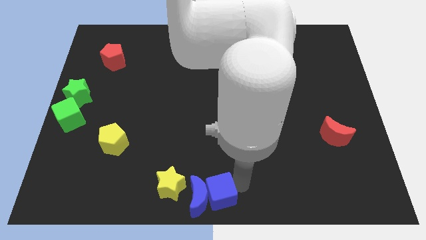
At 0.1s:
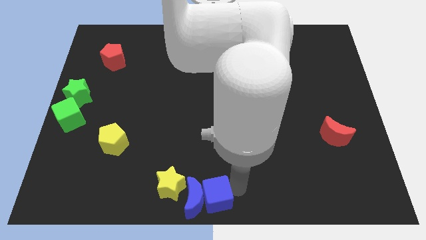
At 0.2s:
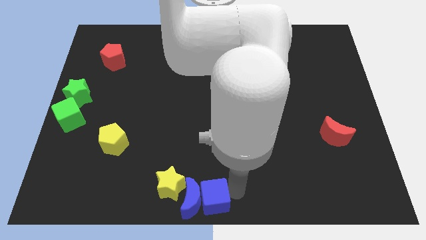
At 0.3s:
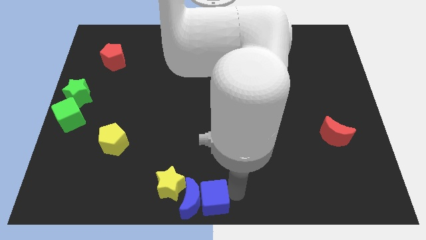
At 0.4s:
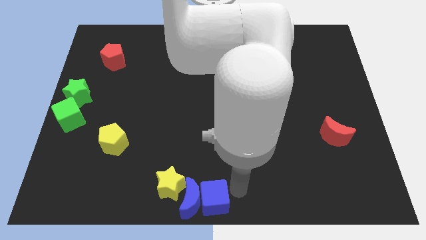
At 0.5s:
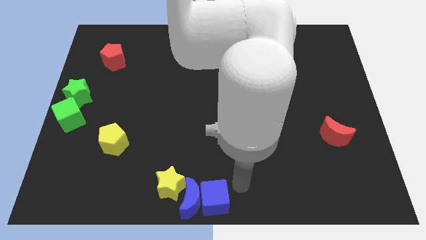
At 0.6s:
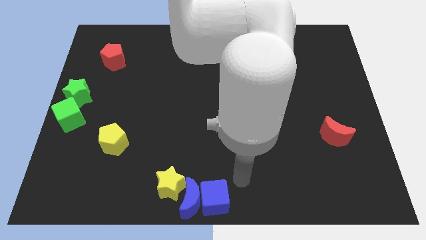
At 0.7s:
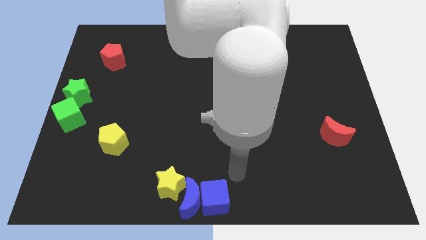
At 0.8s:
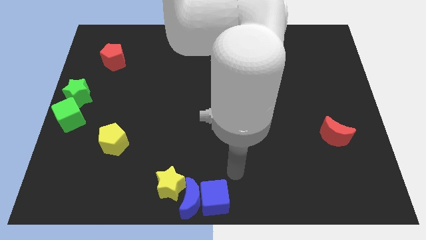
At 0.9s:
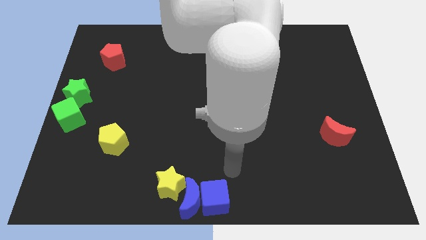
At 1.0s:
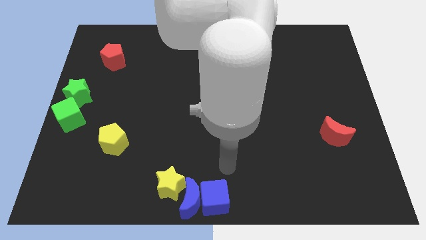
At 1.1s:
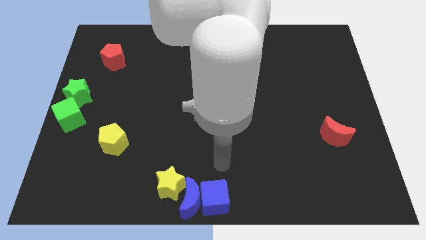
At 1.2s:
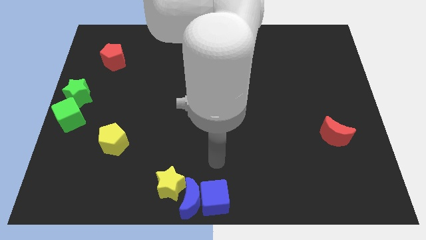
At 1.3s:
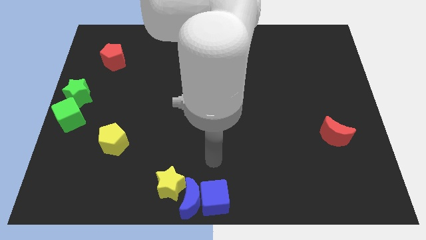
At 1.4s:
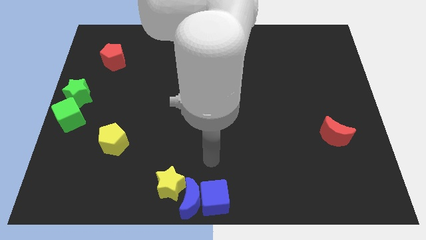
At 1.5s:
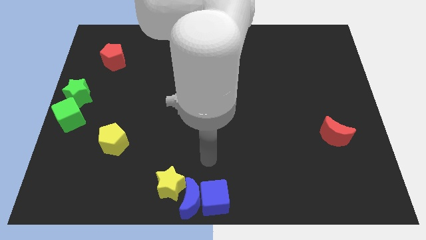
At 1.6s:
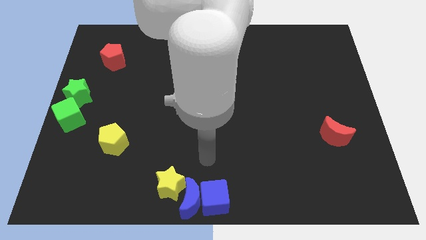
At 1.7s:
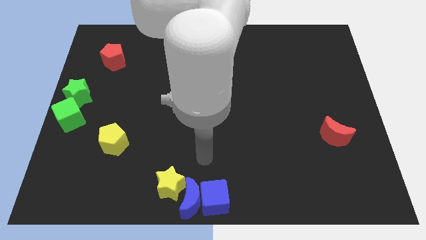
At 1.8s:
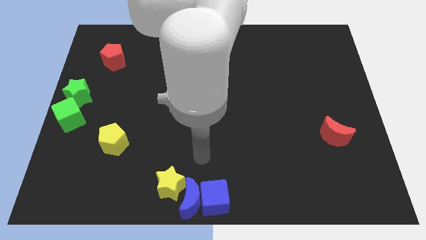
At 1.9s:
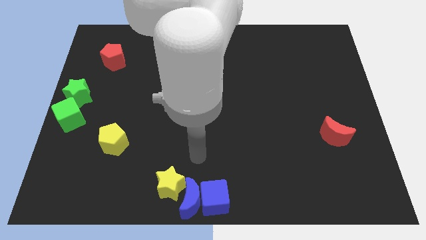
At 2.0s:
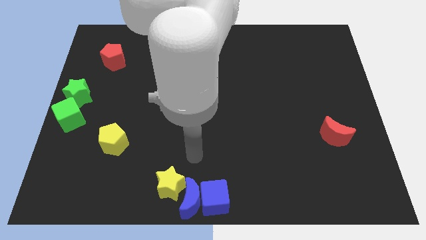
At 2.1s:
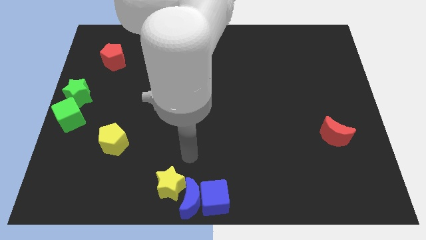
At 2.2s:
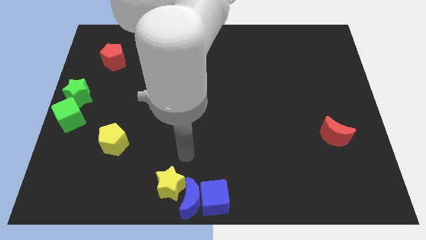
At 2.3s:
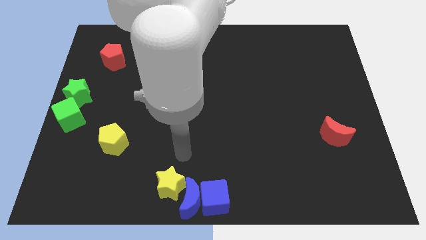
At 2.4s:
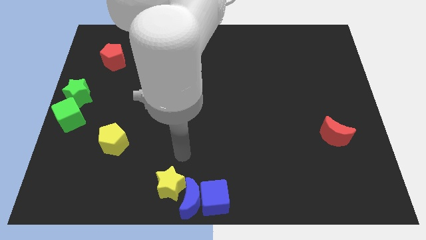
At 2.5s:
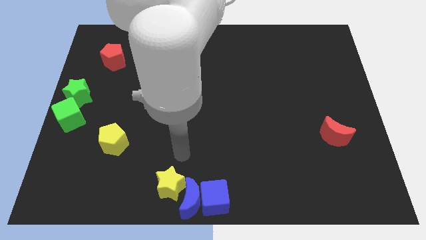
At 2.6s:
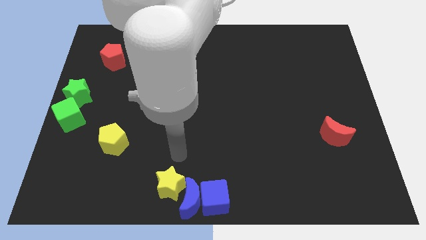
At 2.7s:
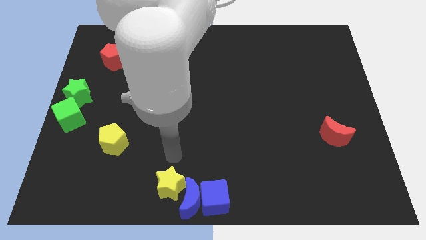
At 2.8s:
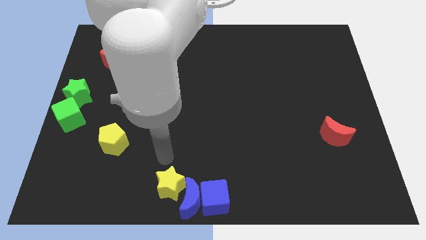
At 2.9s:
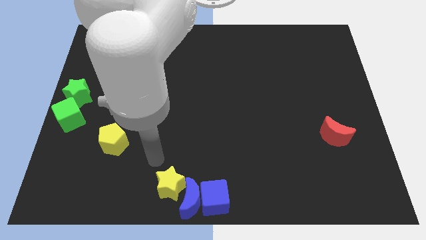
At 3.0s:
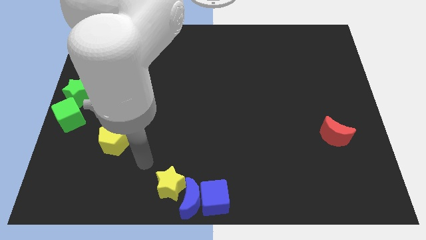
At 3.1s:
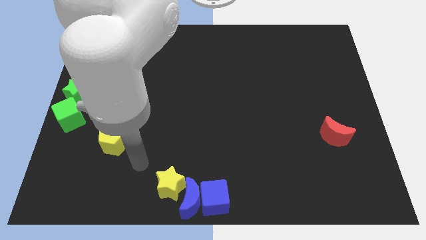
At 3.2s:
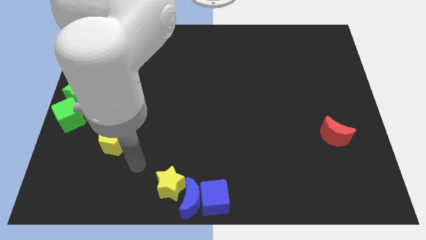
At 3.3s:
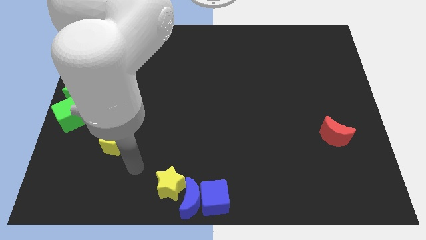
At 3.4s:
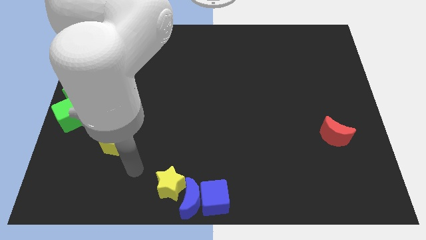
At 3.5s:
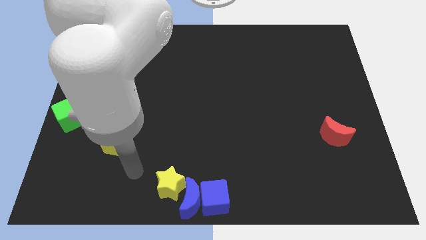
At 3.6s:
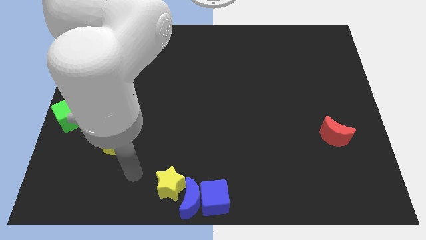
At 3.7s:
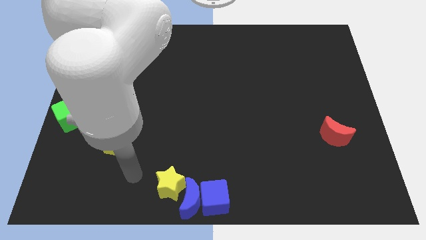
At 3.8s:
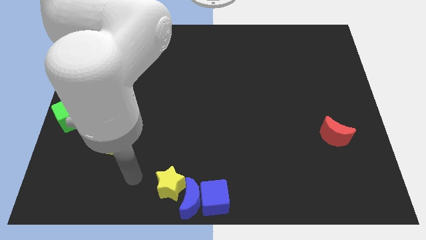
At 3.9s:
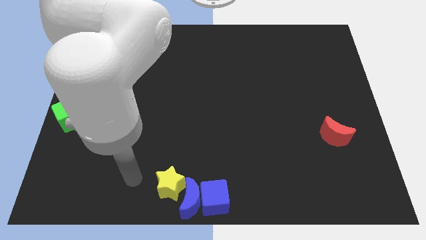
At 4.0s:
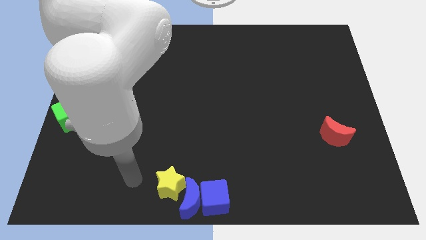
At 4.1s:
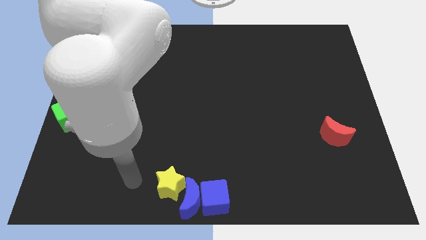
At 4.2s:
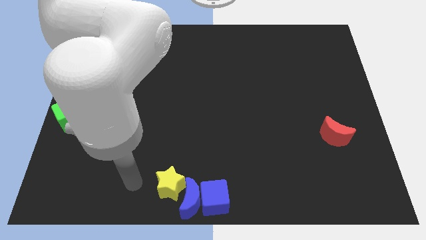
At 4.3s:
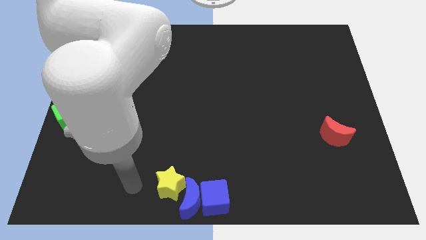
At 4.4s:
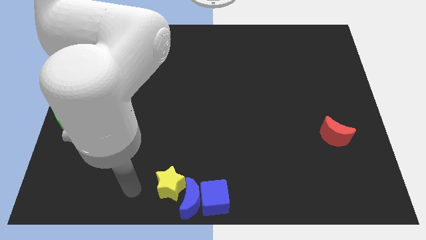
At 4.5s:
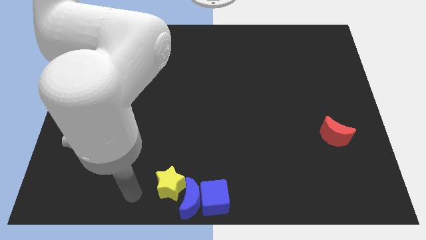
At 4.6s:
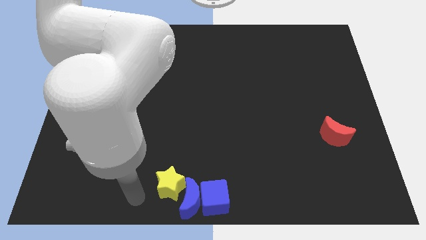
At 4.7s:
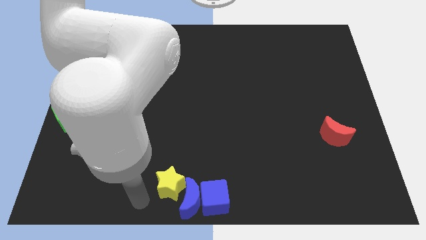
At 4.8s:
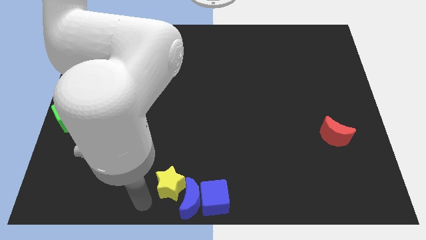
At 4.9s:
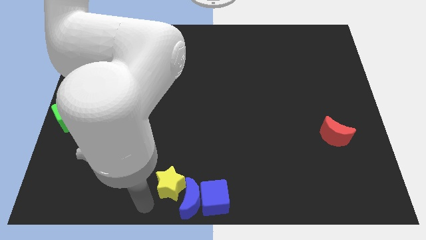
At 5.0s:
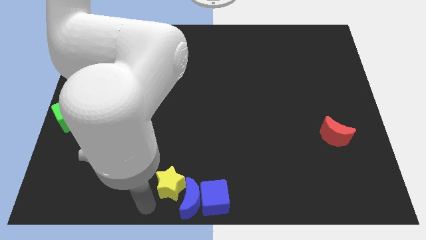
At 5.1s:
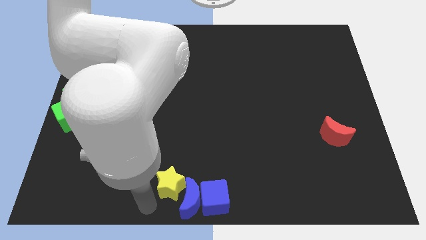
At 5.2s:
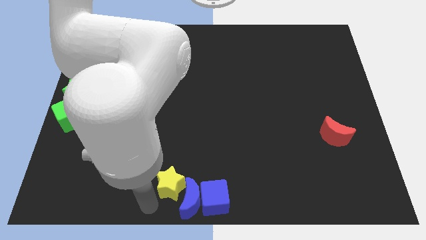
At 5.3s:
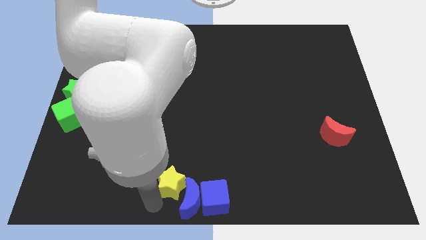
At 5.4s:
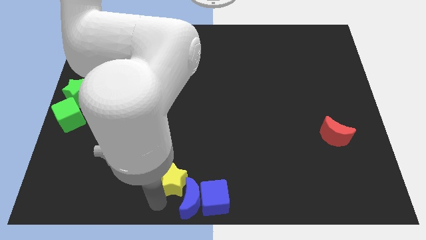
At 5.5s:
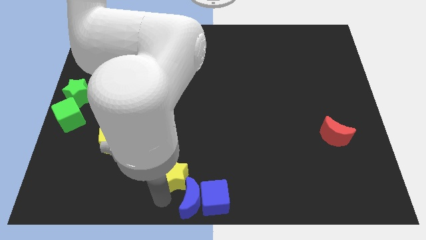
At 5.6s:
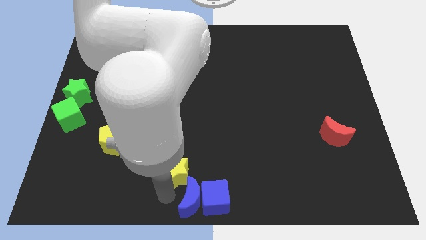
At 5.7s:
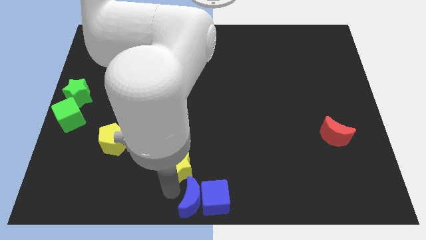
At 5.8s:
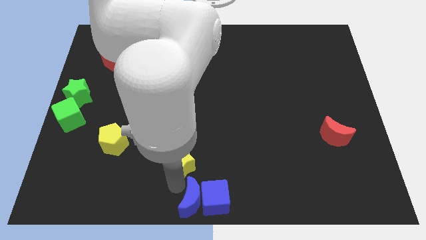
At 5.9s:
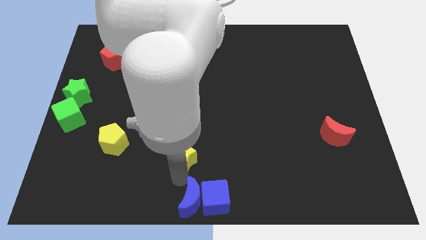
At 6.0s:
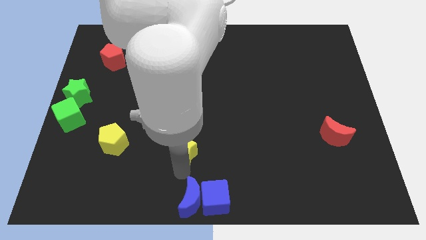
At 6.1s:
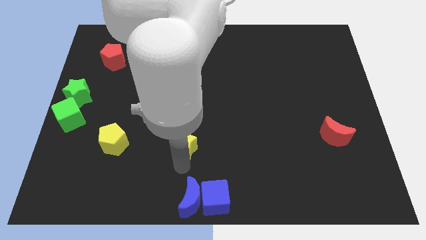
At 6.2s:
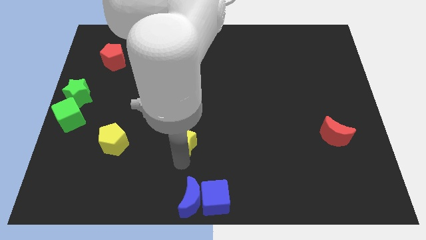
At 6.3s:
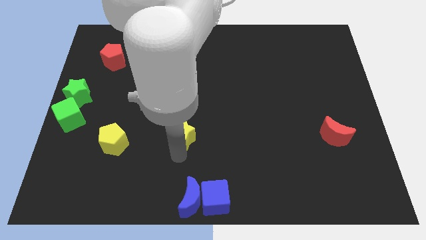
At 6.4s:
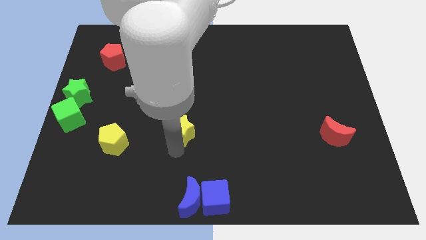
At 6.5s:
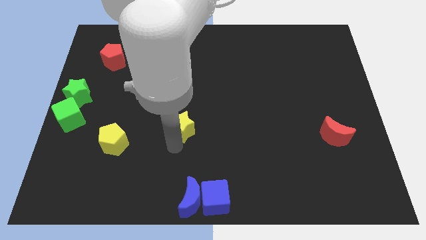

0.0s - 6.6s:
move yellow star to the right of yellow pentagon

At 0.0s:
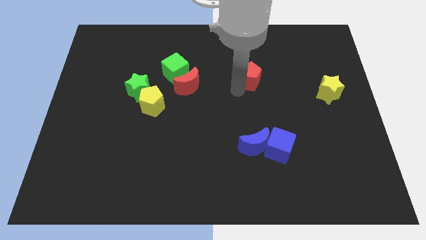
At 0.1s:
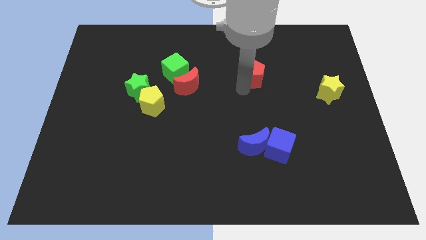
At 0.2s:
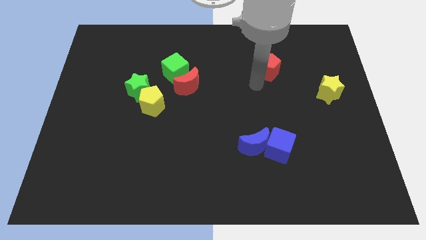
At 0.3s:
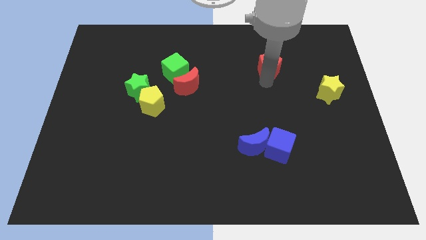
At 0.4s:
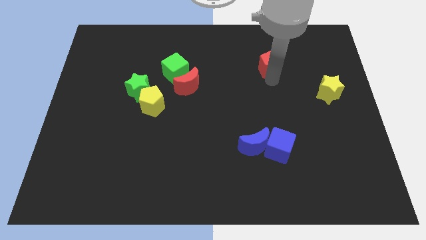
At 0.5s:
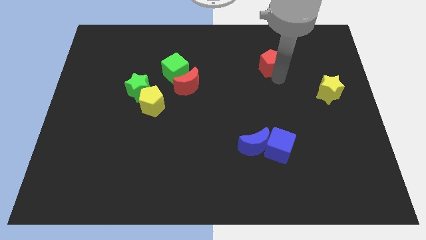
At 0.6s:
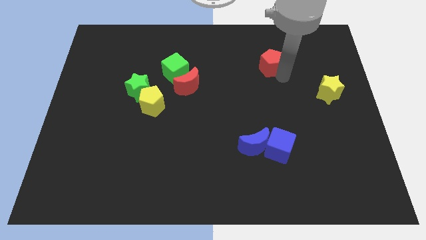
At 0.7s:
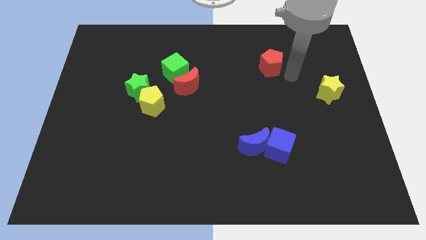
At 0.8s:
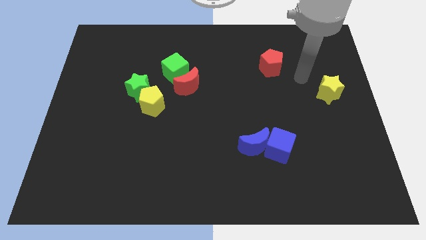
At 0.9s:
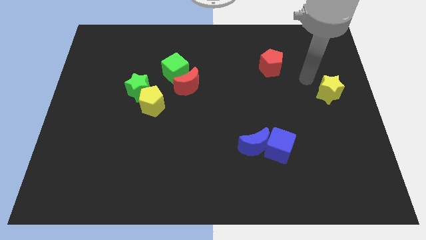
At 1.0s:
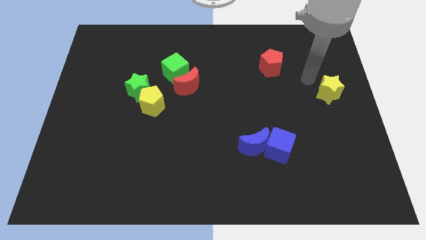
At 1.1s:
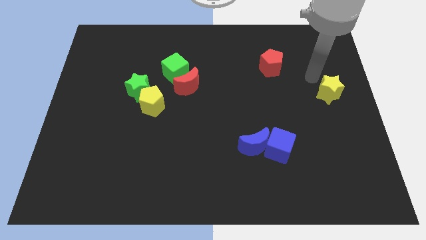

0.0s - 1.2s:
place red pentagon above the blue cube in a vertical line

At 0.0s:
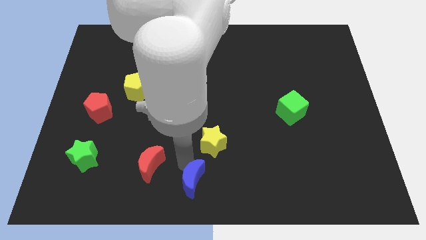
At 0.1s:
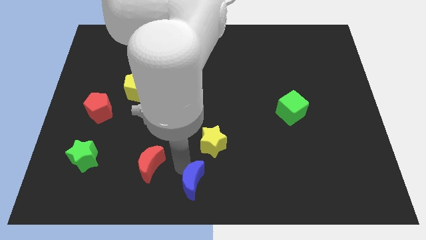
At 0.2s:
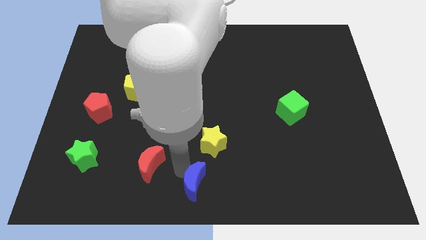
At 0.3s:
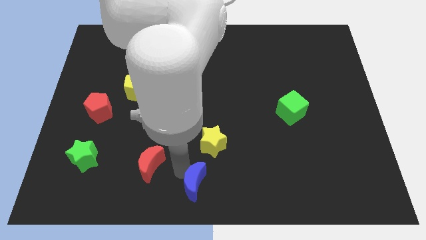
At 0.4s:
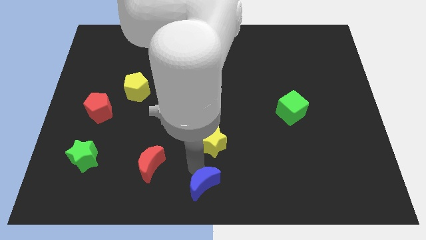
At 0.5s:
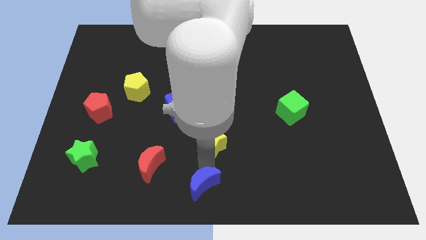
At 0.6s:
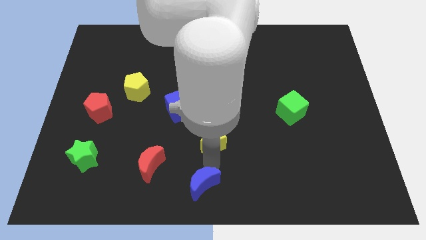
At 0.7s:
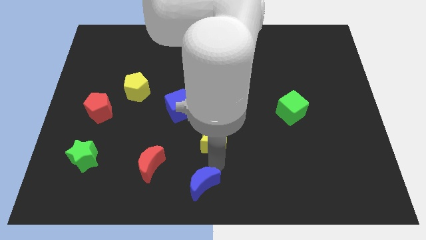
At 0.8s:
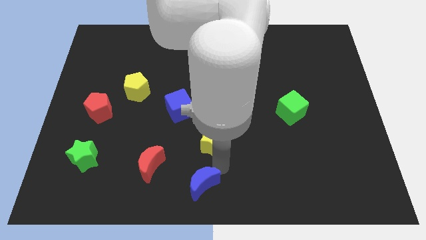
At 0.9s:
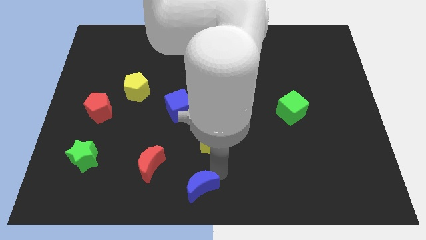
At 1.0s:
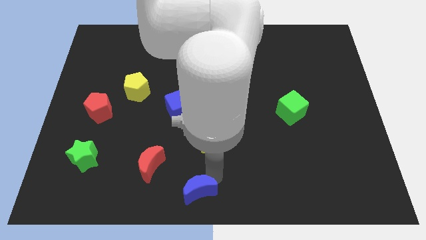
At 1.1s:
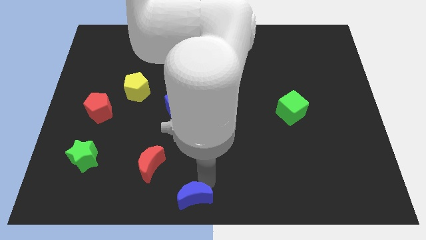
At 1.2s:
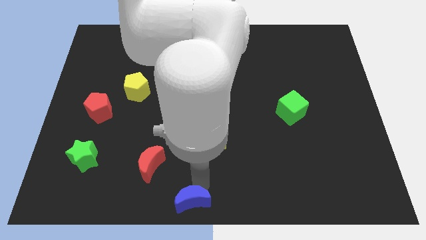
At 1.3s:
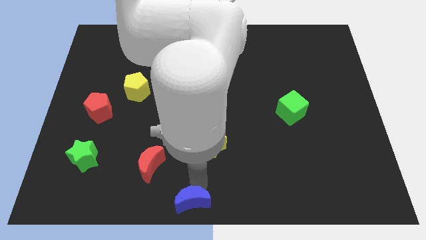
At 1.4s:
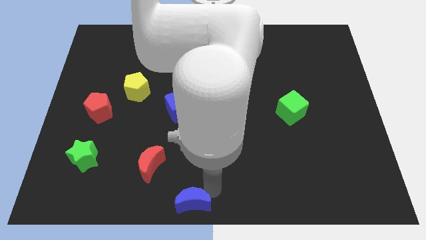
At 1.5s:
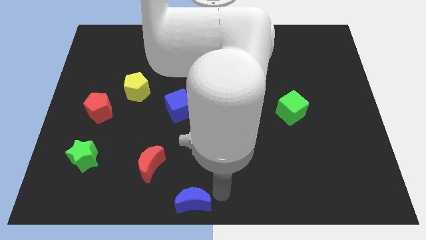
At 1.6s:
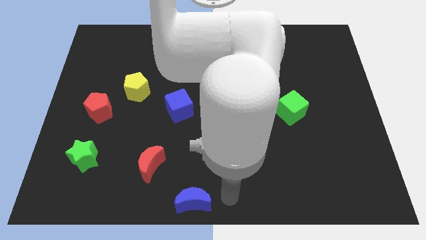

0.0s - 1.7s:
slightly push the blue moon to the bottom center of the board
